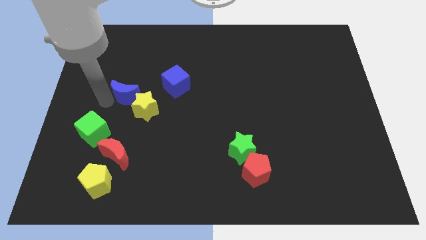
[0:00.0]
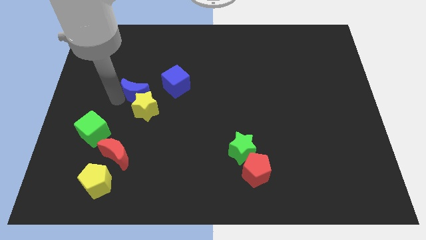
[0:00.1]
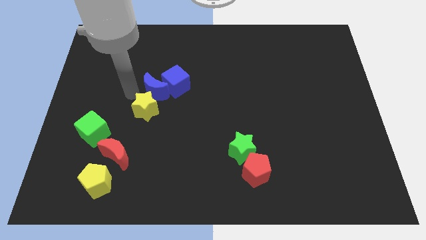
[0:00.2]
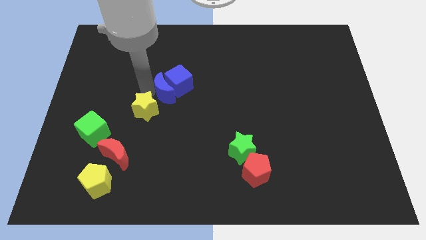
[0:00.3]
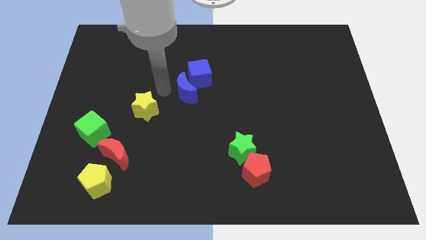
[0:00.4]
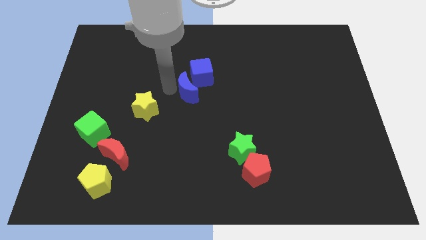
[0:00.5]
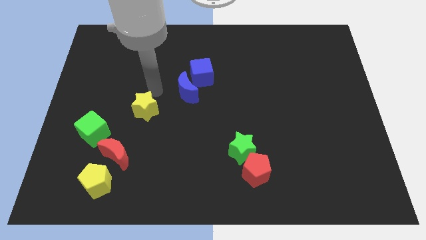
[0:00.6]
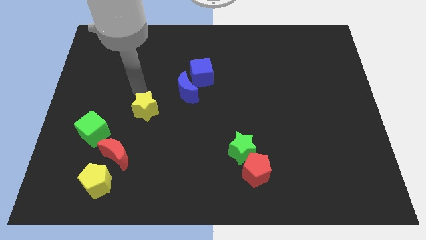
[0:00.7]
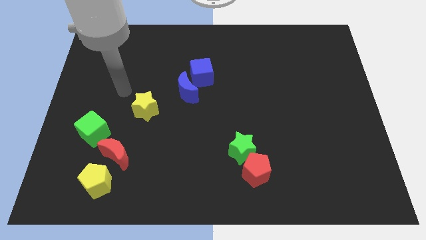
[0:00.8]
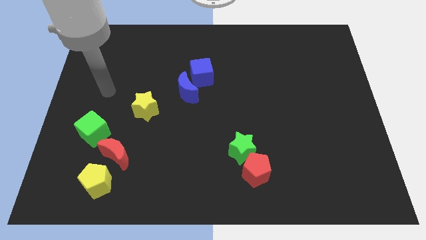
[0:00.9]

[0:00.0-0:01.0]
place blue crescent towards blue cube

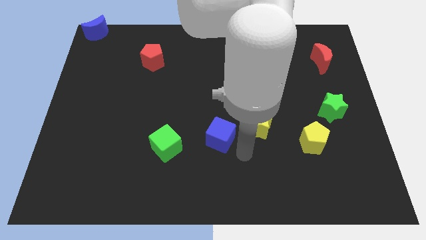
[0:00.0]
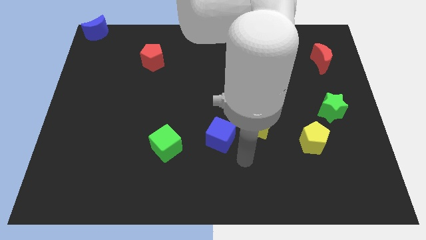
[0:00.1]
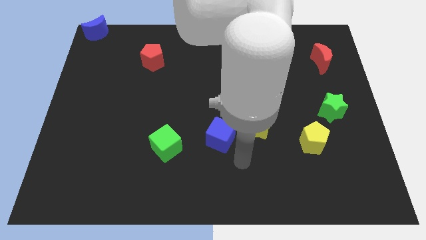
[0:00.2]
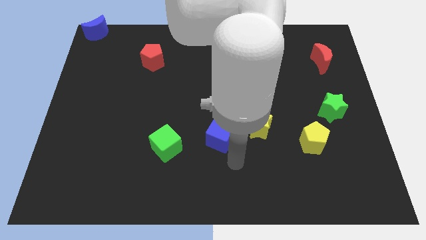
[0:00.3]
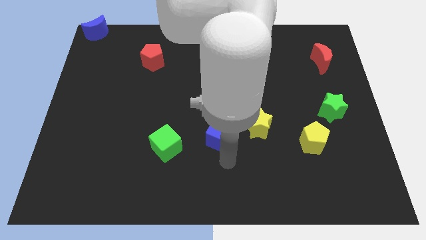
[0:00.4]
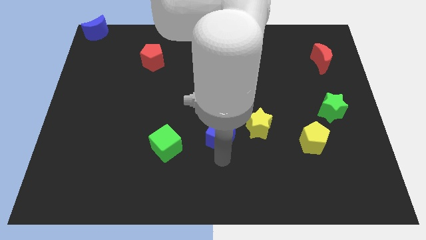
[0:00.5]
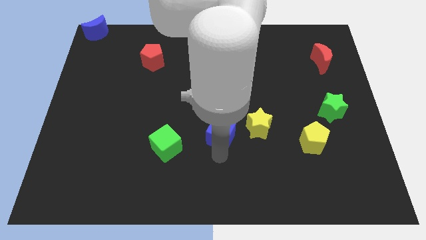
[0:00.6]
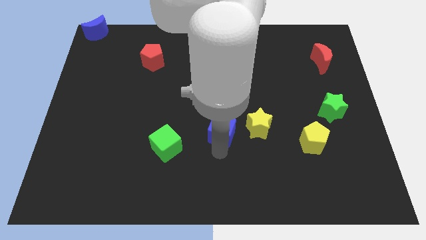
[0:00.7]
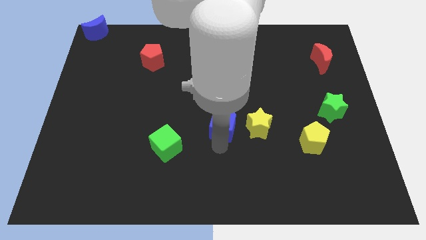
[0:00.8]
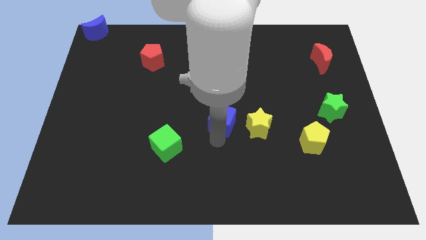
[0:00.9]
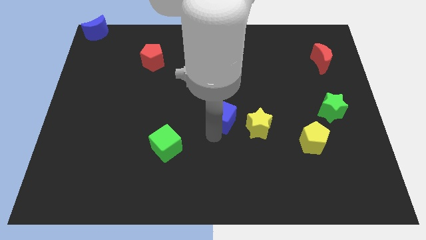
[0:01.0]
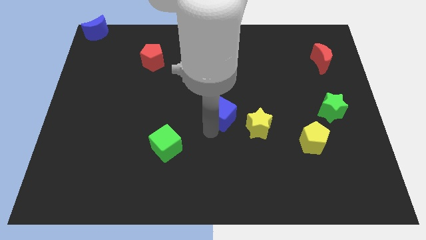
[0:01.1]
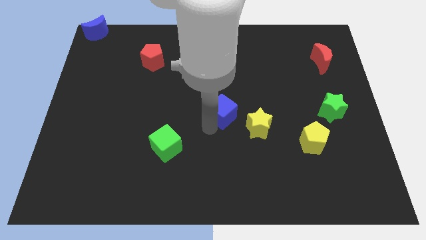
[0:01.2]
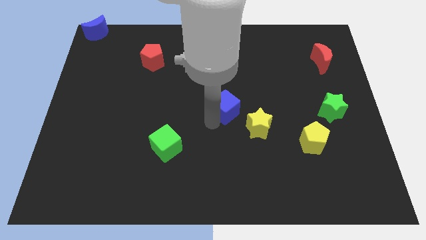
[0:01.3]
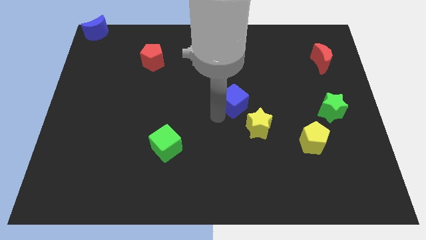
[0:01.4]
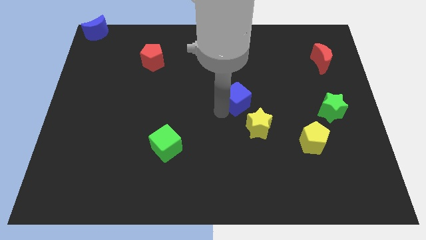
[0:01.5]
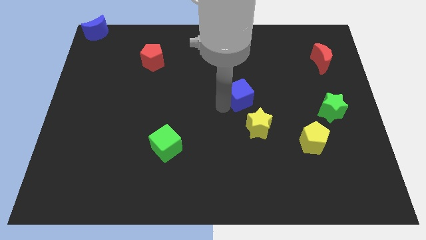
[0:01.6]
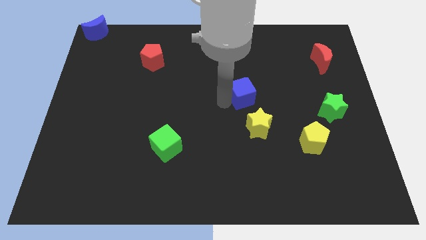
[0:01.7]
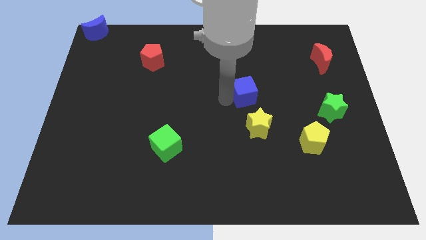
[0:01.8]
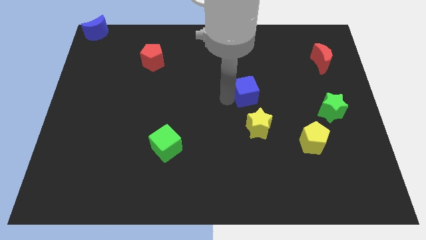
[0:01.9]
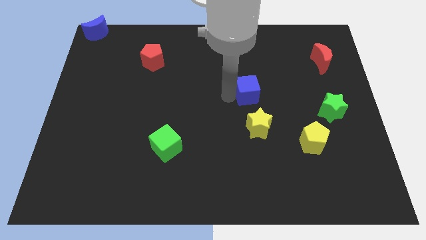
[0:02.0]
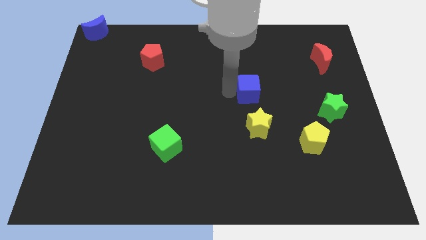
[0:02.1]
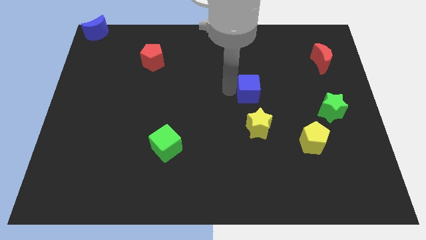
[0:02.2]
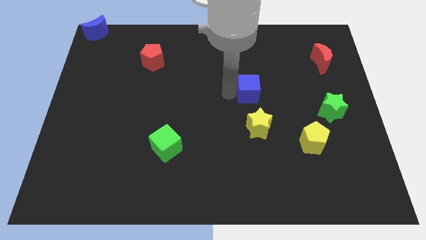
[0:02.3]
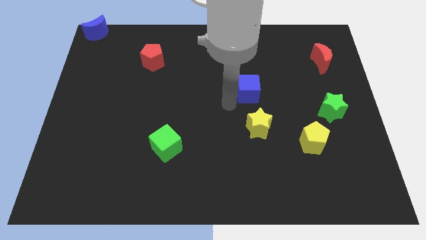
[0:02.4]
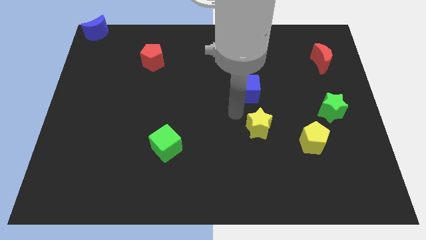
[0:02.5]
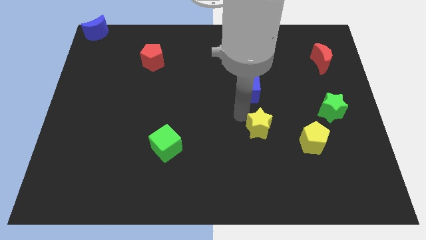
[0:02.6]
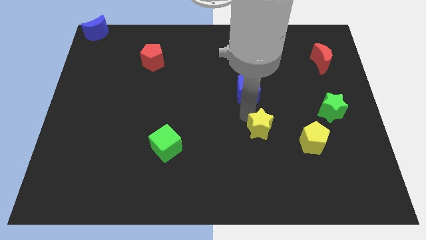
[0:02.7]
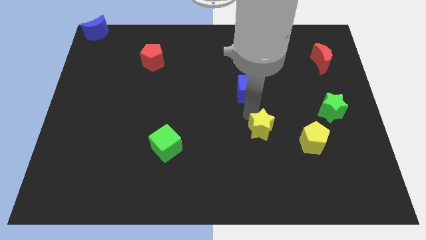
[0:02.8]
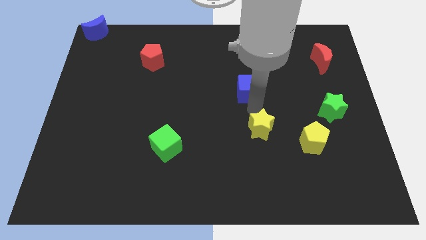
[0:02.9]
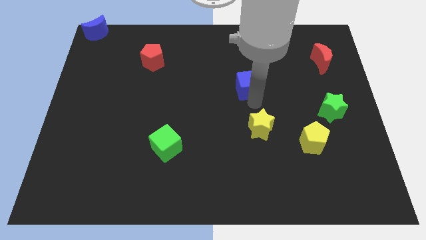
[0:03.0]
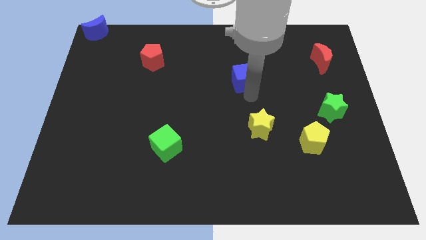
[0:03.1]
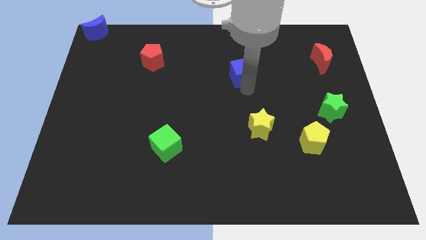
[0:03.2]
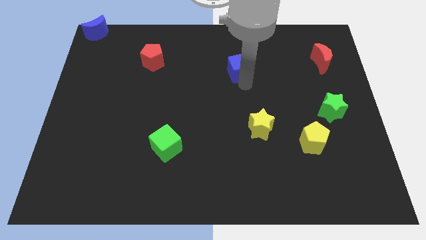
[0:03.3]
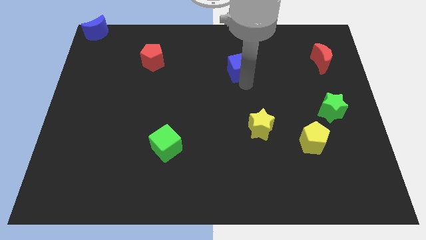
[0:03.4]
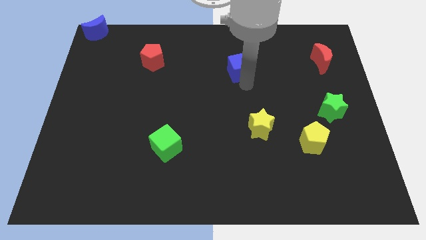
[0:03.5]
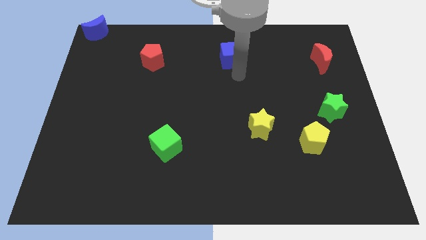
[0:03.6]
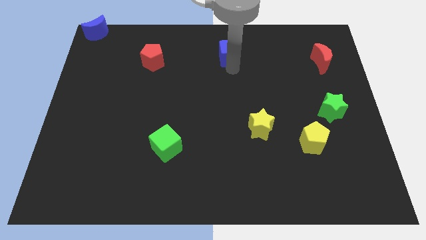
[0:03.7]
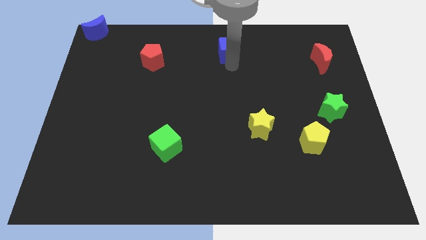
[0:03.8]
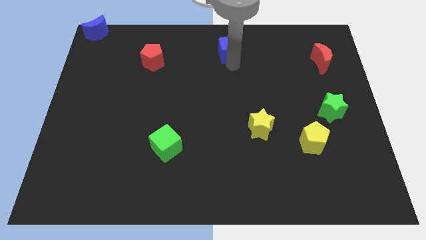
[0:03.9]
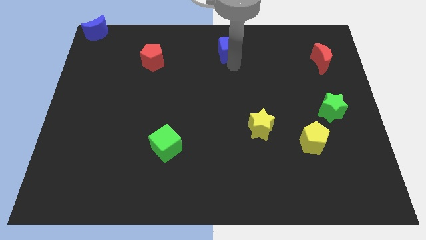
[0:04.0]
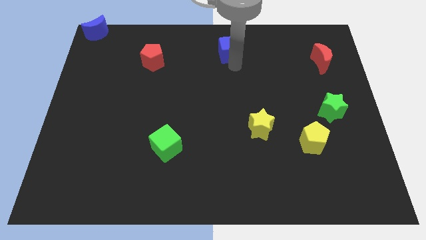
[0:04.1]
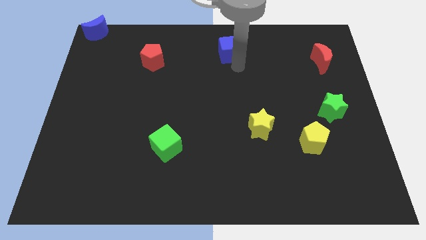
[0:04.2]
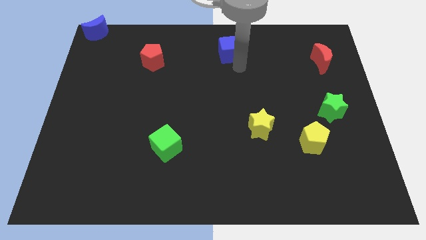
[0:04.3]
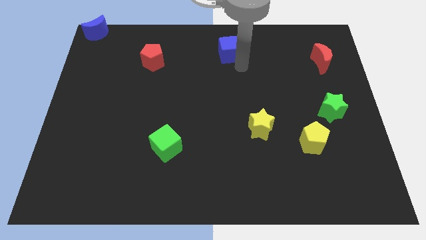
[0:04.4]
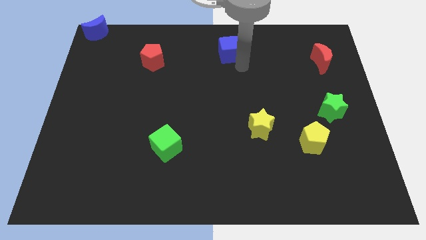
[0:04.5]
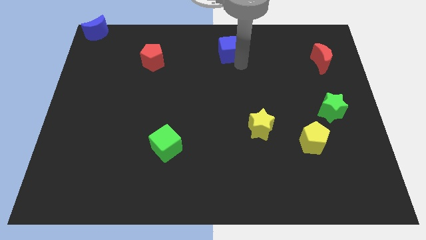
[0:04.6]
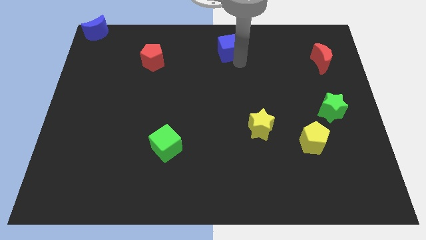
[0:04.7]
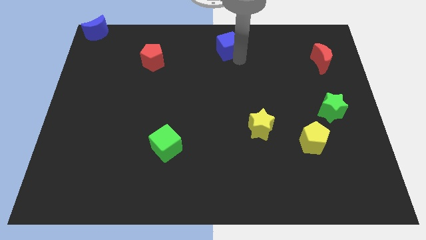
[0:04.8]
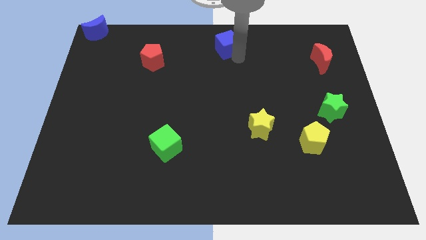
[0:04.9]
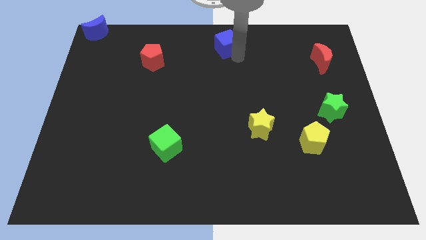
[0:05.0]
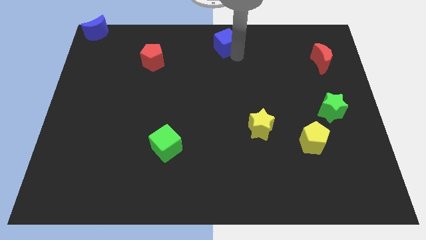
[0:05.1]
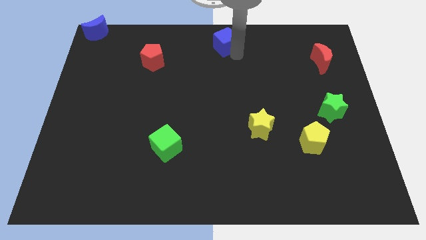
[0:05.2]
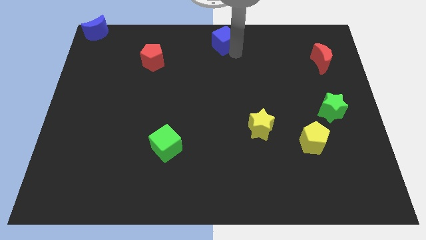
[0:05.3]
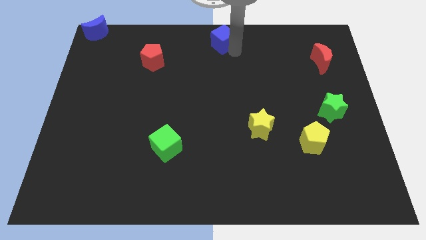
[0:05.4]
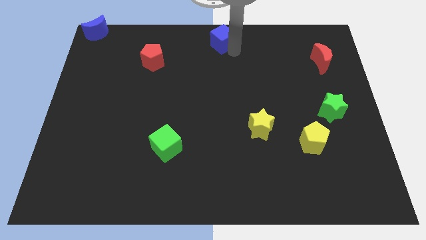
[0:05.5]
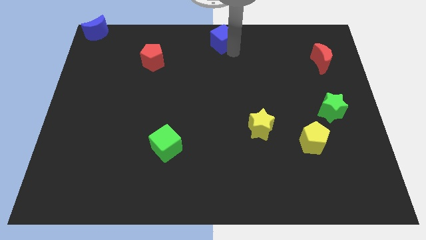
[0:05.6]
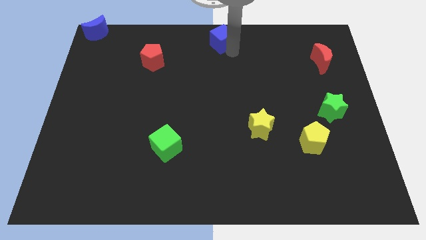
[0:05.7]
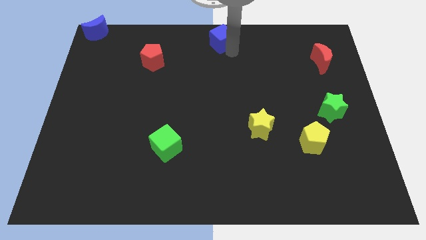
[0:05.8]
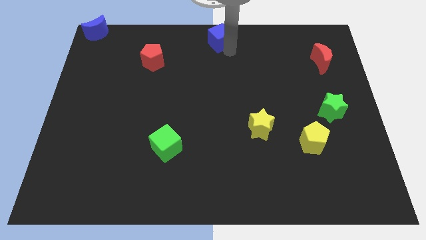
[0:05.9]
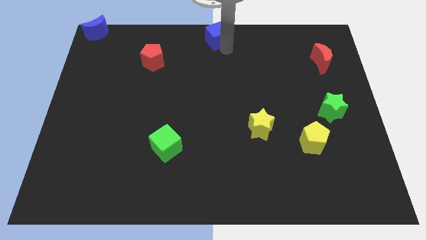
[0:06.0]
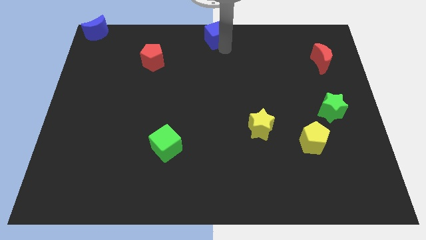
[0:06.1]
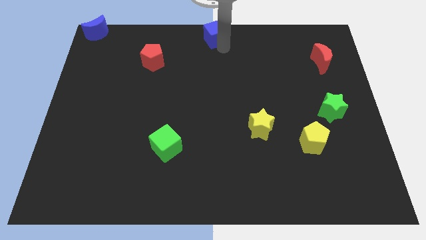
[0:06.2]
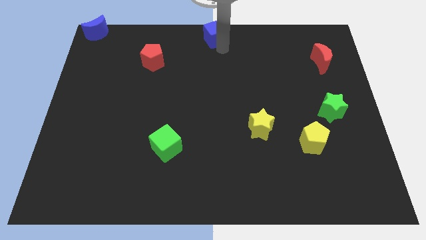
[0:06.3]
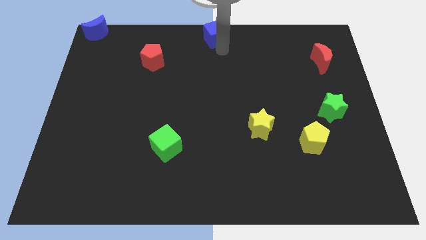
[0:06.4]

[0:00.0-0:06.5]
push the blue cube to the top center of the board

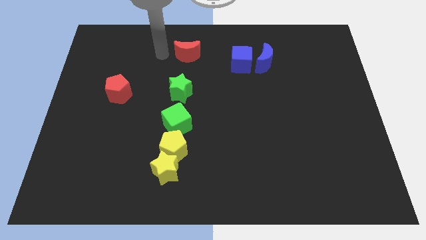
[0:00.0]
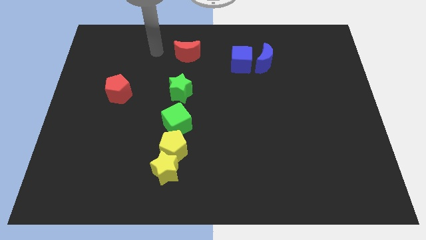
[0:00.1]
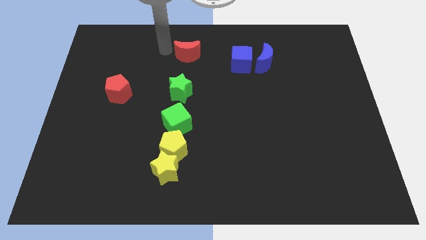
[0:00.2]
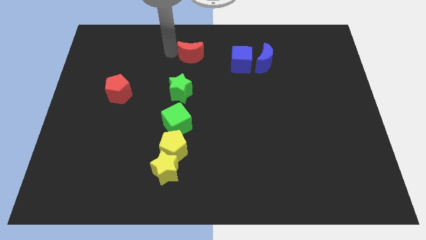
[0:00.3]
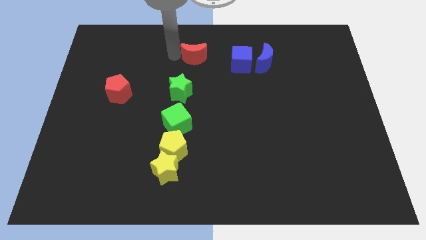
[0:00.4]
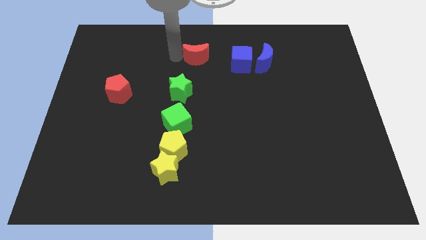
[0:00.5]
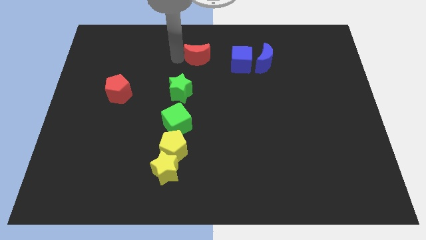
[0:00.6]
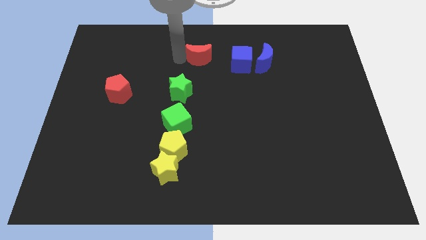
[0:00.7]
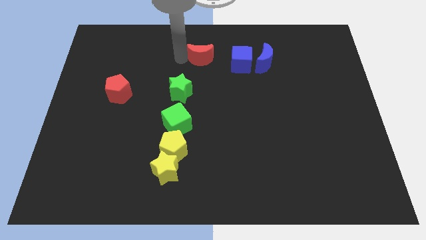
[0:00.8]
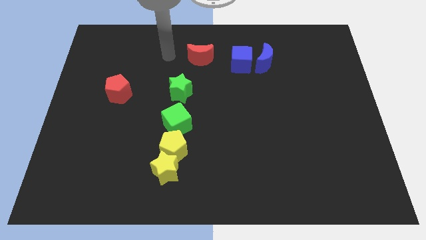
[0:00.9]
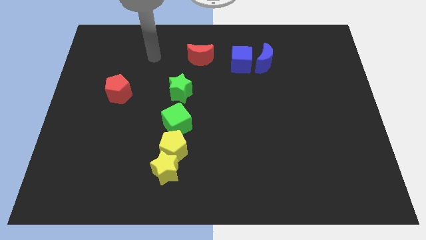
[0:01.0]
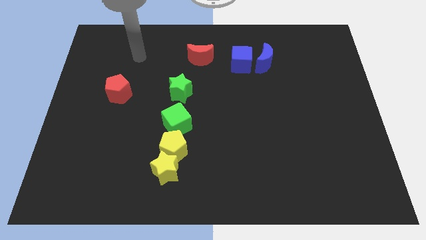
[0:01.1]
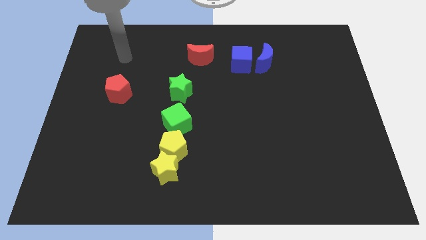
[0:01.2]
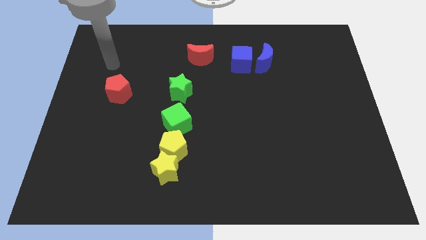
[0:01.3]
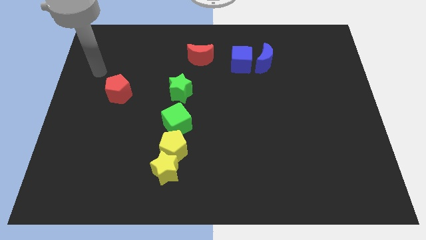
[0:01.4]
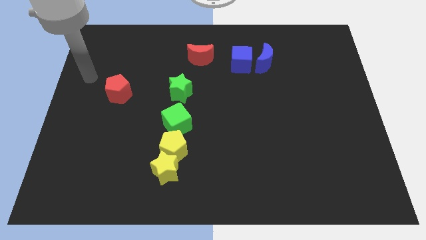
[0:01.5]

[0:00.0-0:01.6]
push the red crescent to the left side of the blue cube
